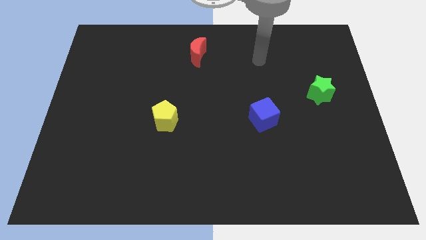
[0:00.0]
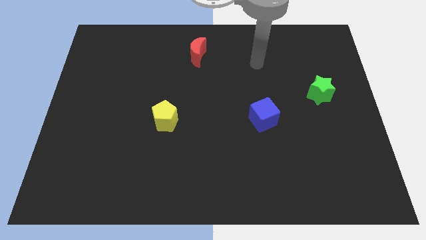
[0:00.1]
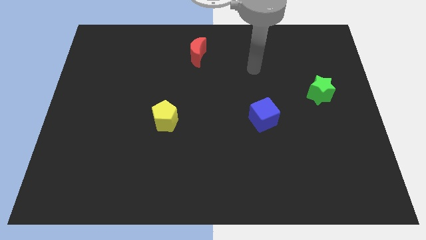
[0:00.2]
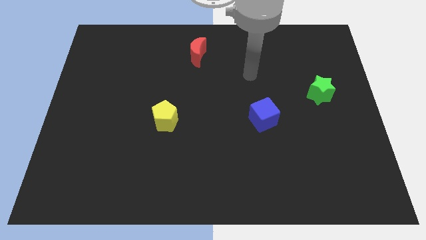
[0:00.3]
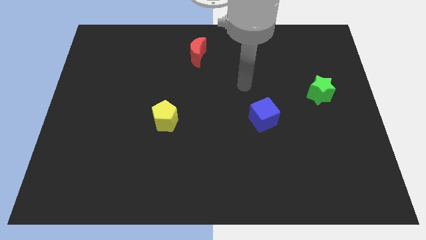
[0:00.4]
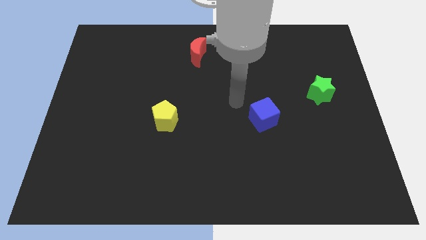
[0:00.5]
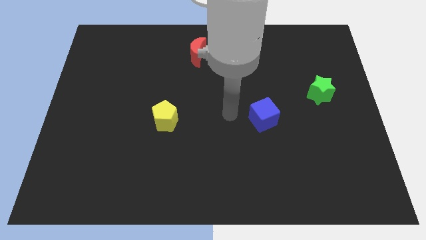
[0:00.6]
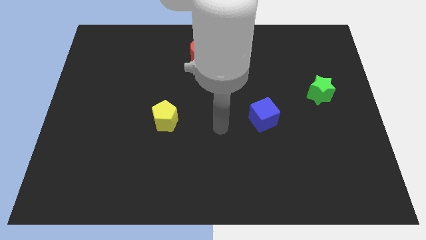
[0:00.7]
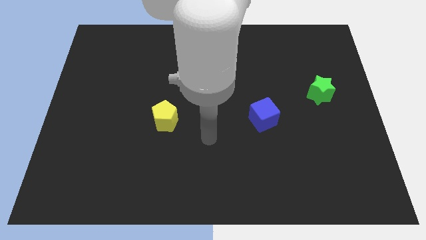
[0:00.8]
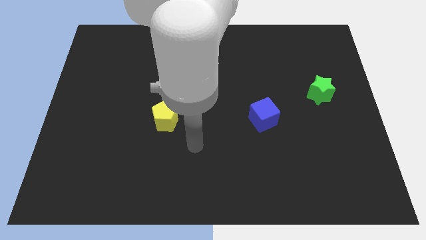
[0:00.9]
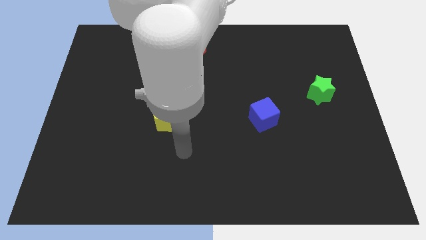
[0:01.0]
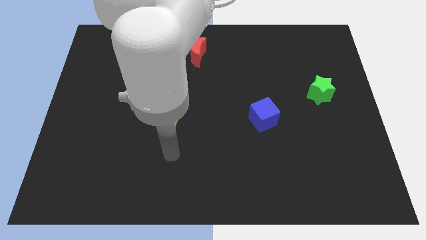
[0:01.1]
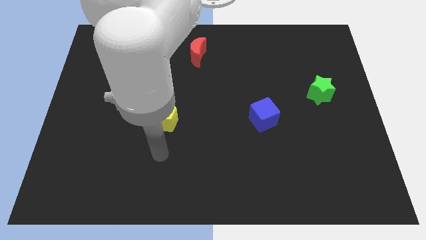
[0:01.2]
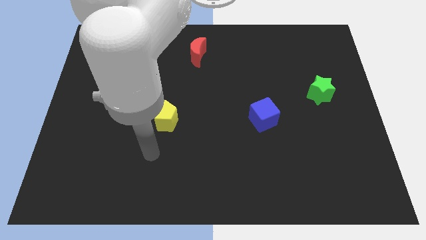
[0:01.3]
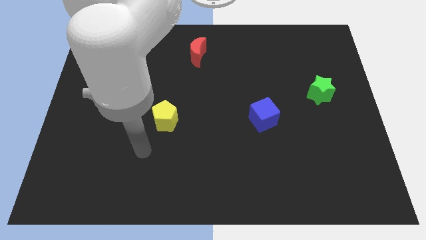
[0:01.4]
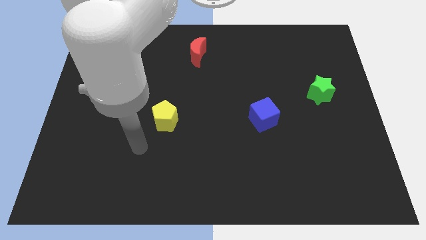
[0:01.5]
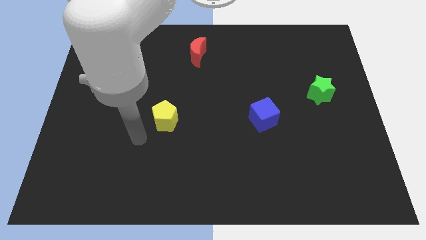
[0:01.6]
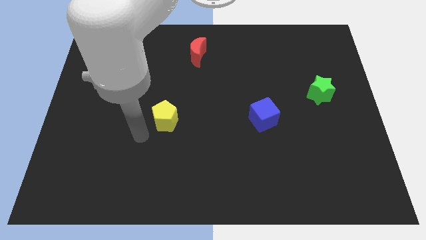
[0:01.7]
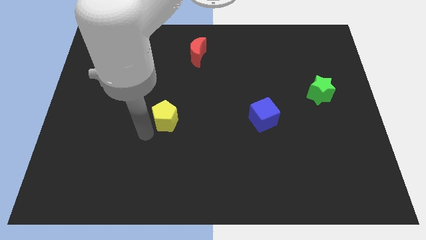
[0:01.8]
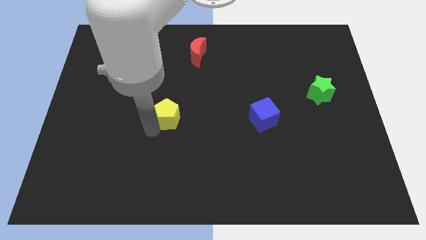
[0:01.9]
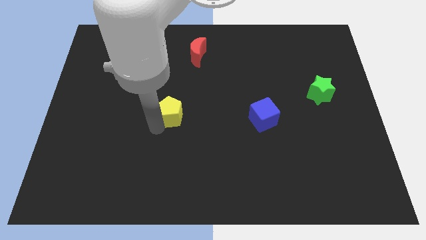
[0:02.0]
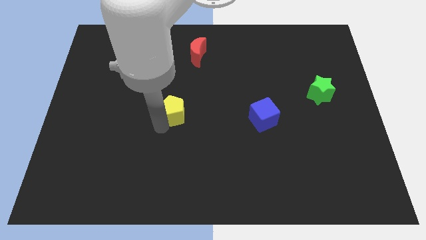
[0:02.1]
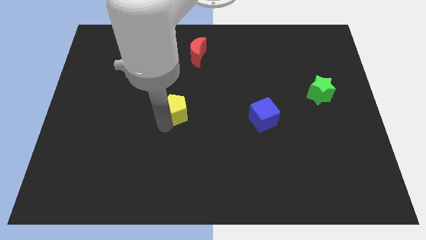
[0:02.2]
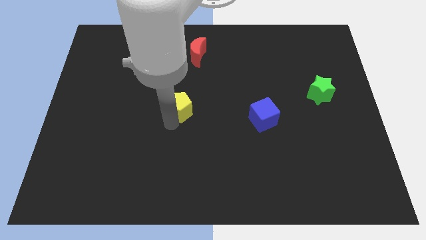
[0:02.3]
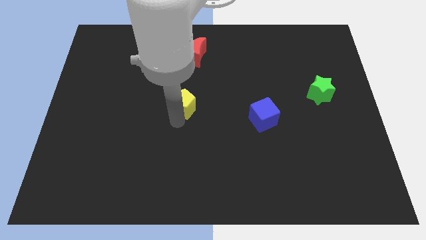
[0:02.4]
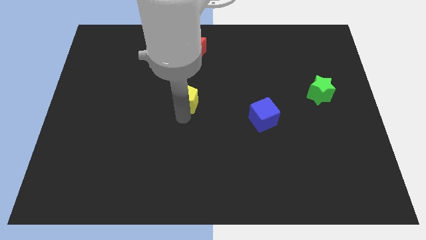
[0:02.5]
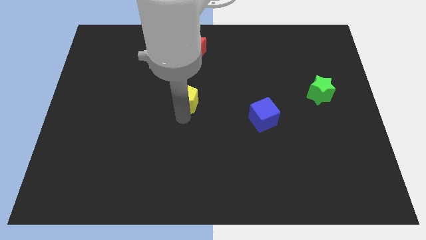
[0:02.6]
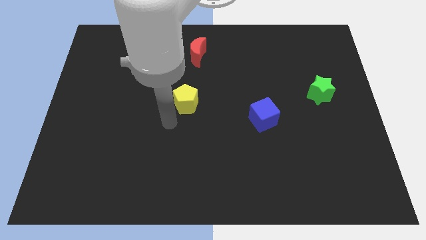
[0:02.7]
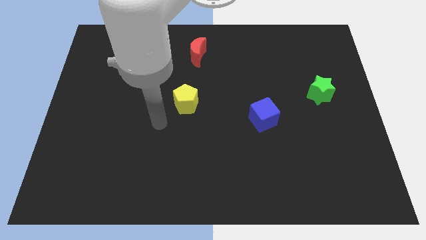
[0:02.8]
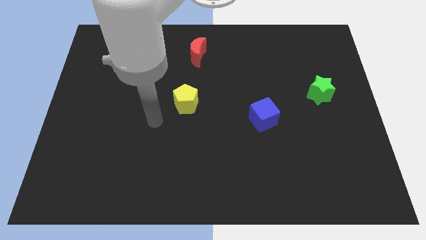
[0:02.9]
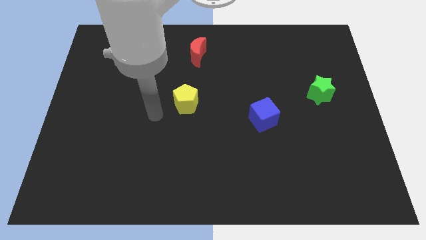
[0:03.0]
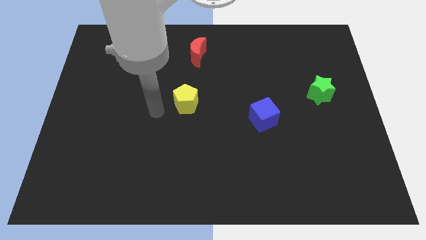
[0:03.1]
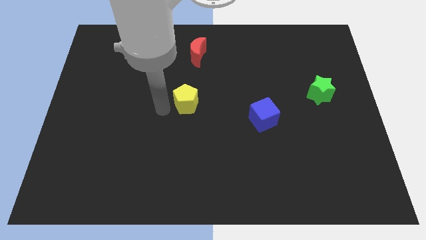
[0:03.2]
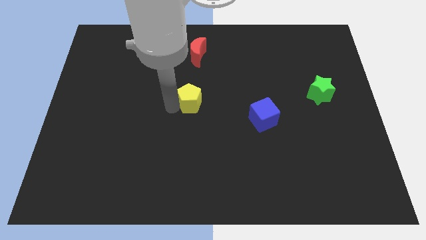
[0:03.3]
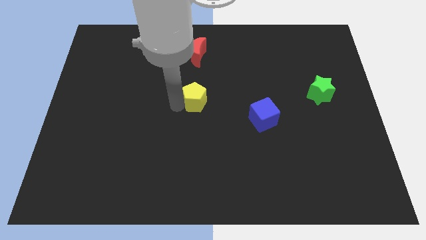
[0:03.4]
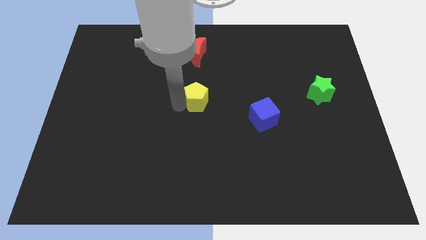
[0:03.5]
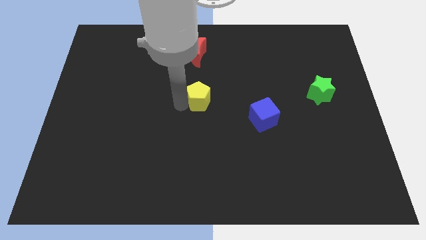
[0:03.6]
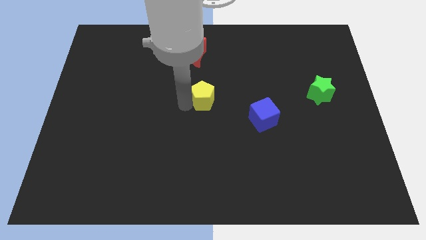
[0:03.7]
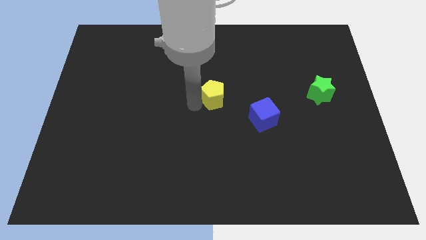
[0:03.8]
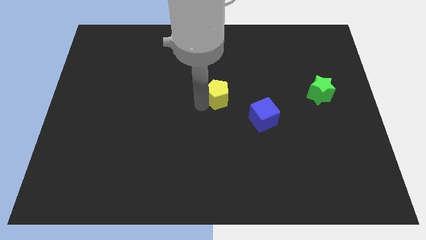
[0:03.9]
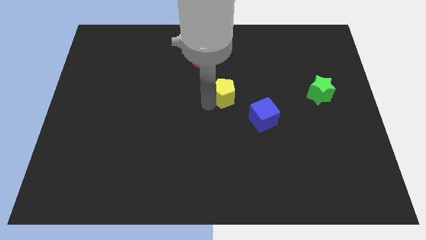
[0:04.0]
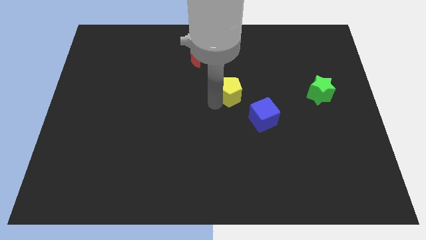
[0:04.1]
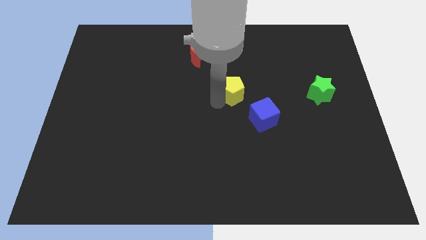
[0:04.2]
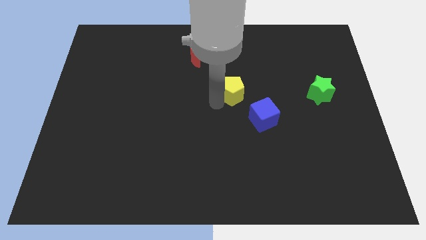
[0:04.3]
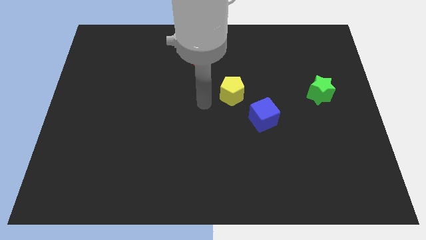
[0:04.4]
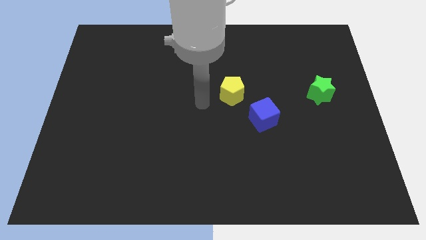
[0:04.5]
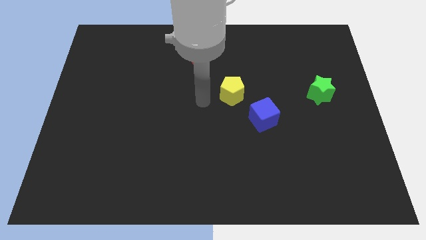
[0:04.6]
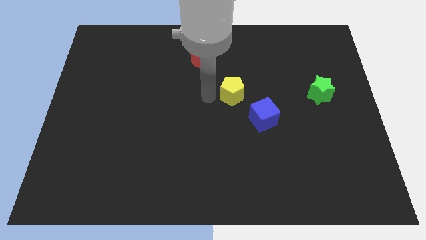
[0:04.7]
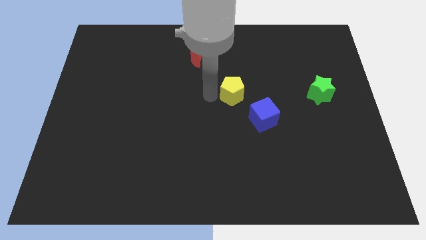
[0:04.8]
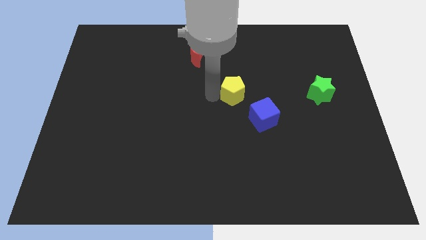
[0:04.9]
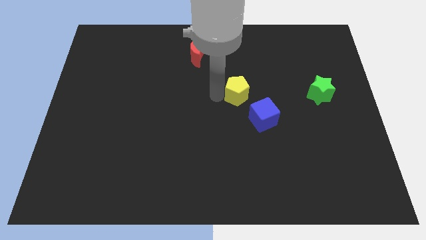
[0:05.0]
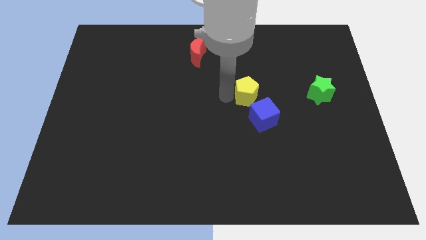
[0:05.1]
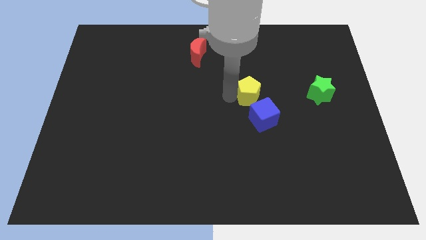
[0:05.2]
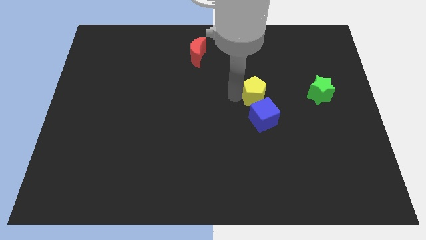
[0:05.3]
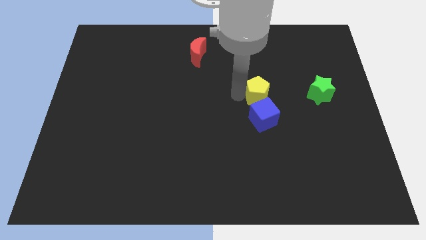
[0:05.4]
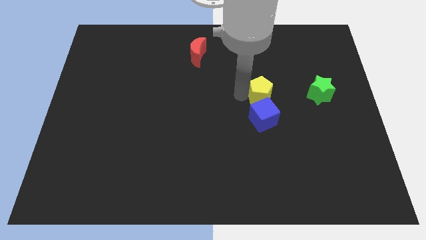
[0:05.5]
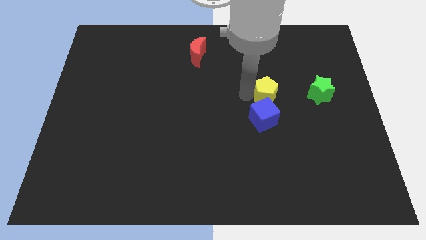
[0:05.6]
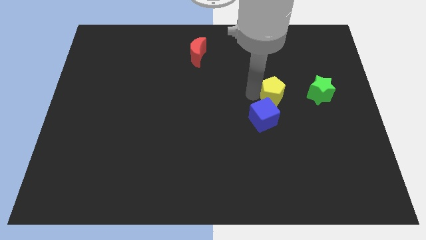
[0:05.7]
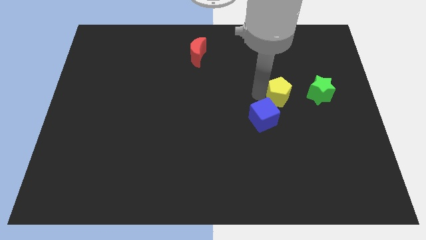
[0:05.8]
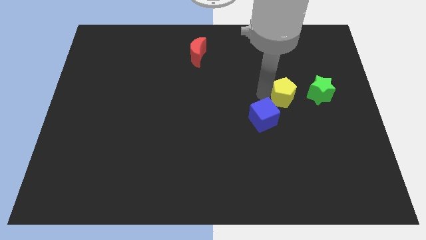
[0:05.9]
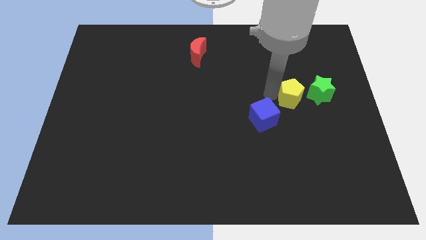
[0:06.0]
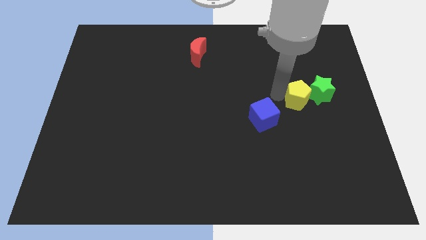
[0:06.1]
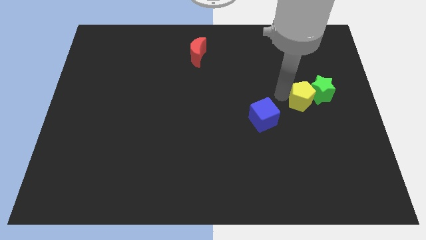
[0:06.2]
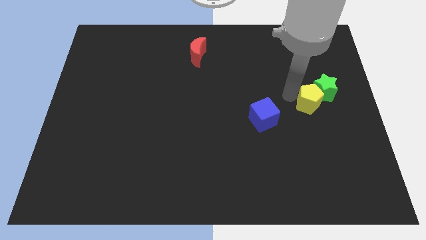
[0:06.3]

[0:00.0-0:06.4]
slide the yellow block next to the green block

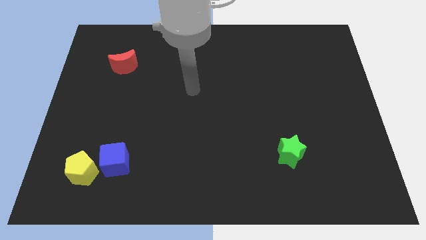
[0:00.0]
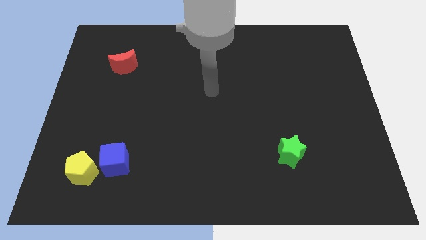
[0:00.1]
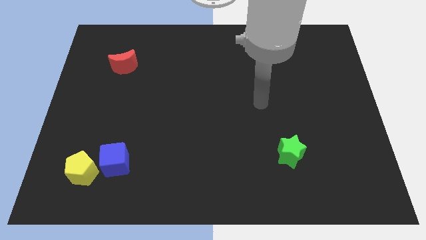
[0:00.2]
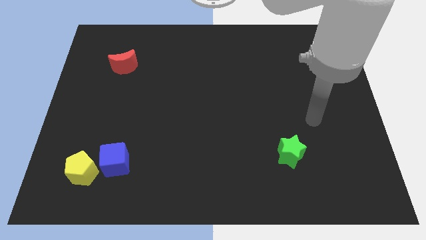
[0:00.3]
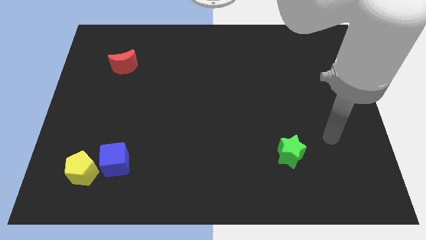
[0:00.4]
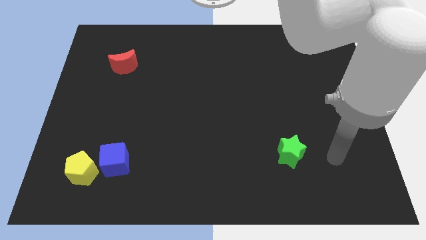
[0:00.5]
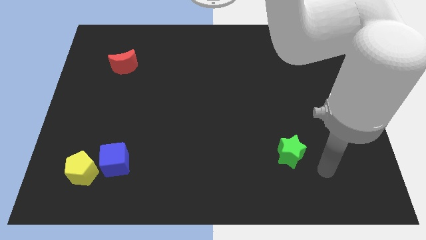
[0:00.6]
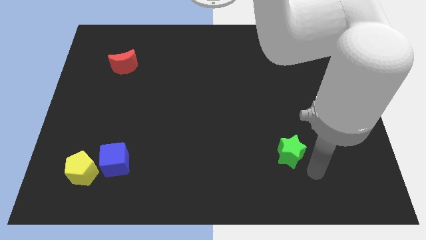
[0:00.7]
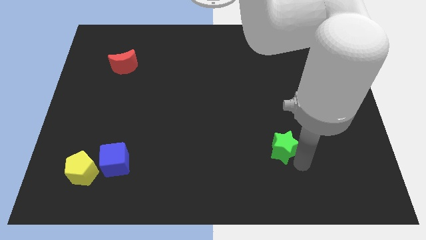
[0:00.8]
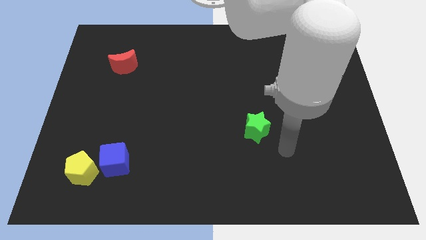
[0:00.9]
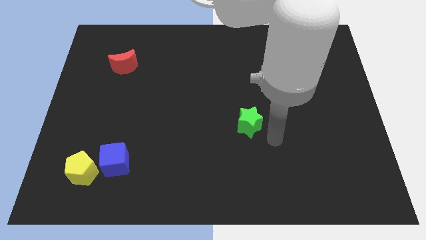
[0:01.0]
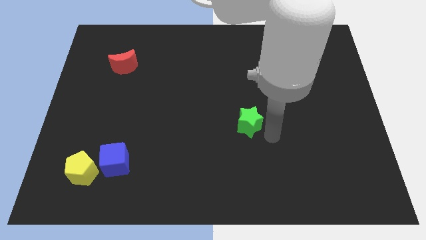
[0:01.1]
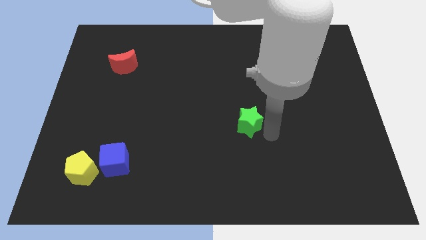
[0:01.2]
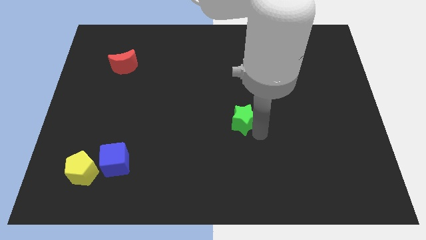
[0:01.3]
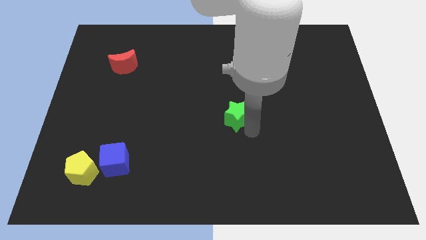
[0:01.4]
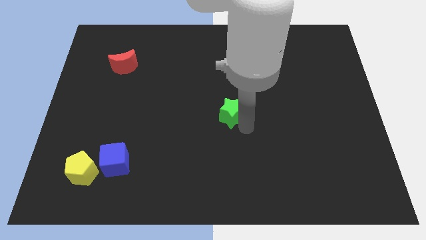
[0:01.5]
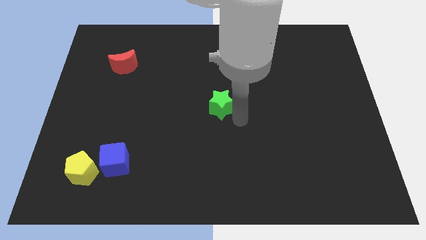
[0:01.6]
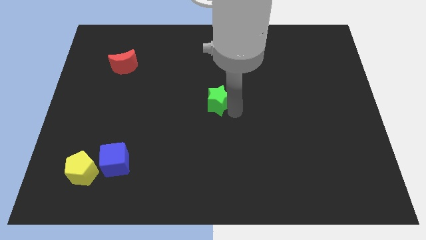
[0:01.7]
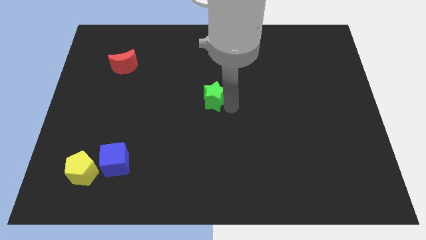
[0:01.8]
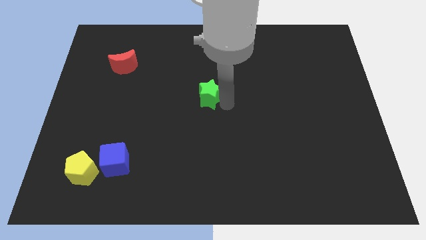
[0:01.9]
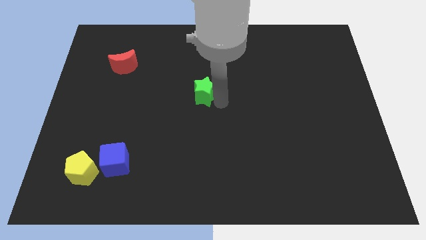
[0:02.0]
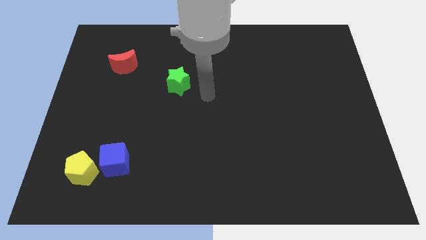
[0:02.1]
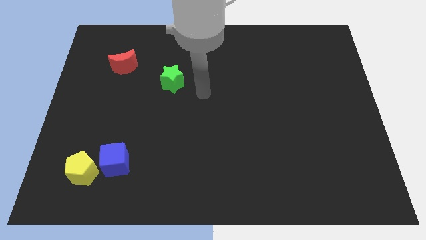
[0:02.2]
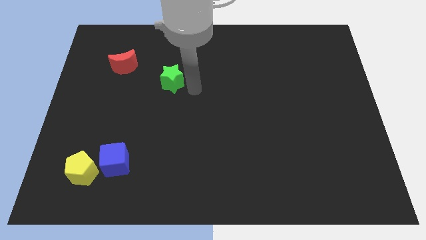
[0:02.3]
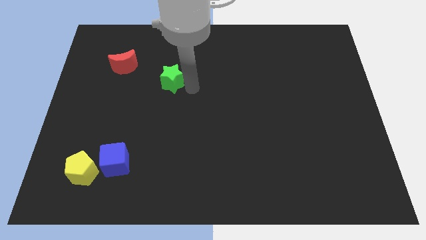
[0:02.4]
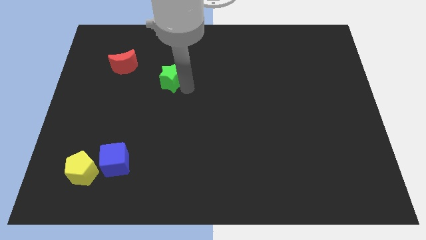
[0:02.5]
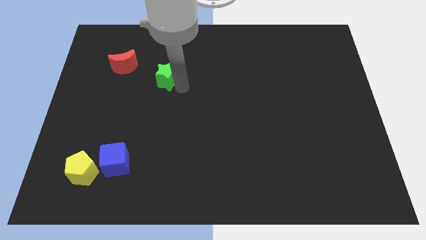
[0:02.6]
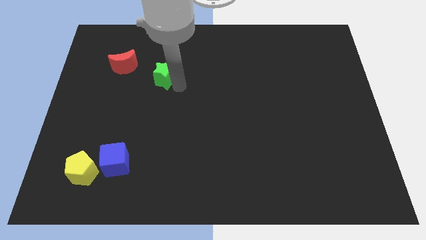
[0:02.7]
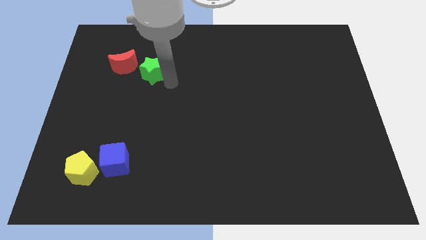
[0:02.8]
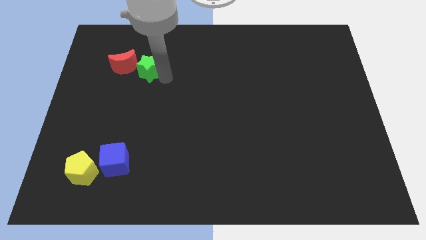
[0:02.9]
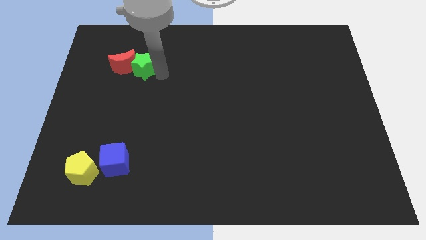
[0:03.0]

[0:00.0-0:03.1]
move the star next to the red moon
